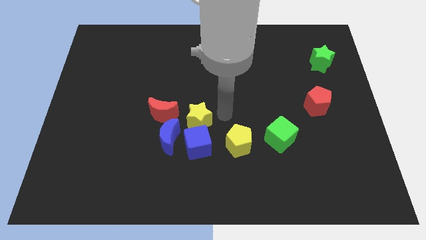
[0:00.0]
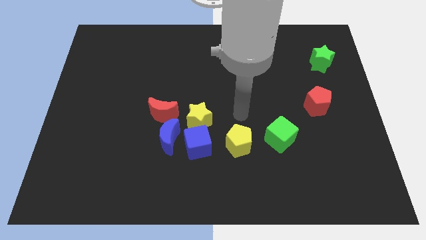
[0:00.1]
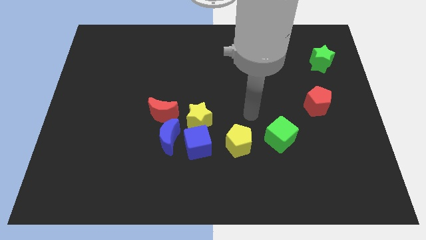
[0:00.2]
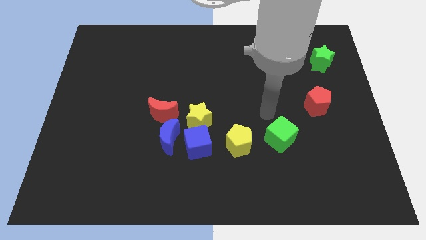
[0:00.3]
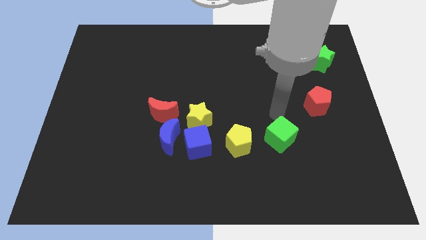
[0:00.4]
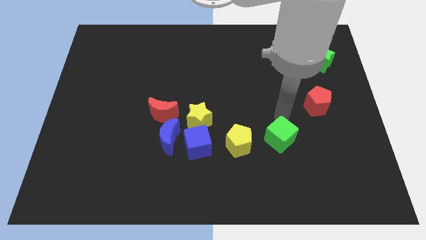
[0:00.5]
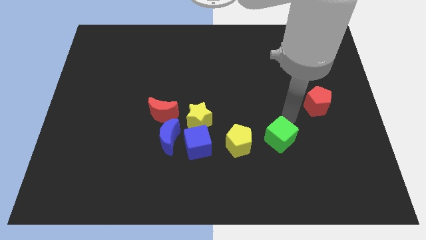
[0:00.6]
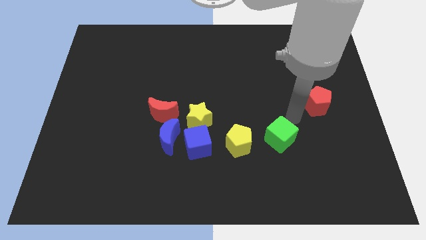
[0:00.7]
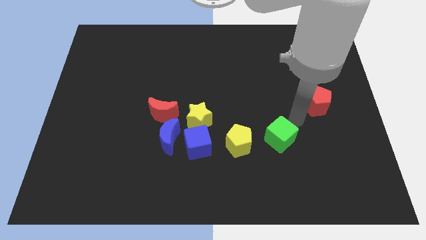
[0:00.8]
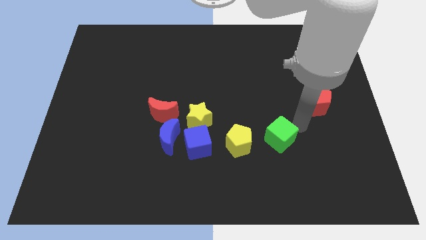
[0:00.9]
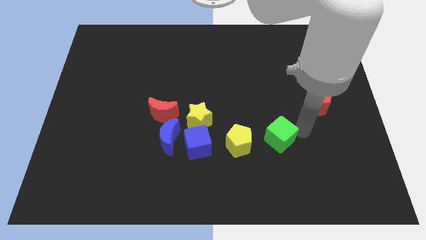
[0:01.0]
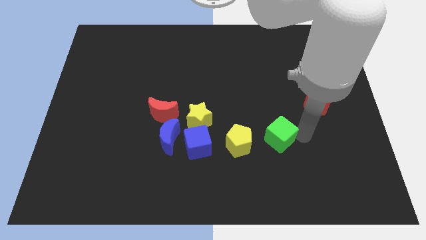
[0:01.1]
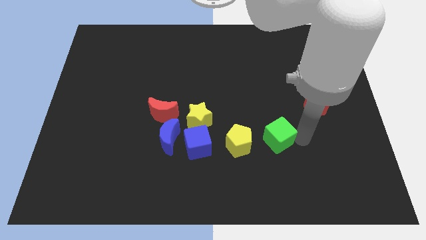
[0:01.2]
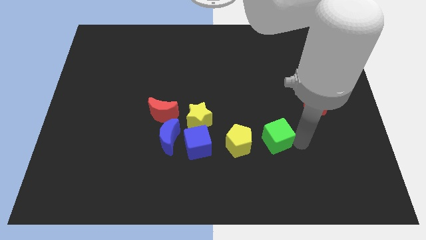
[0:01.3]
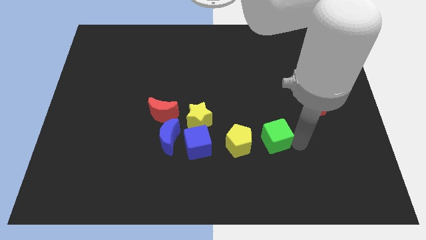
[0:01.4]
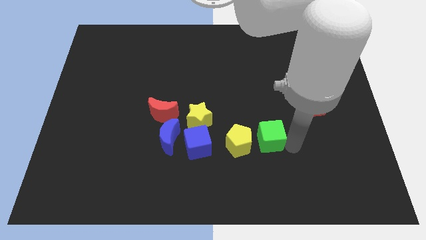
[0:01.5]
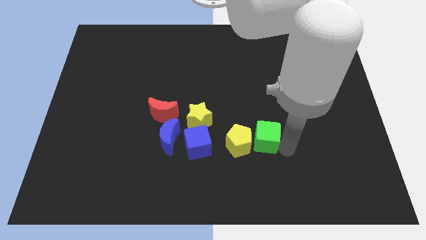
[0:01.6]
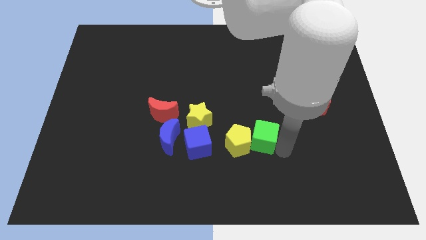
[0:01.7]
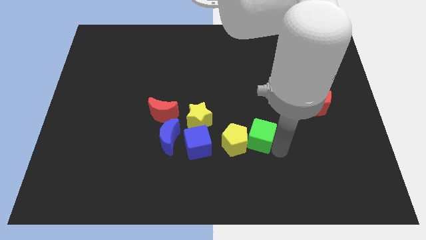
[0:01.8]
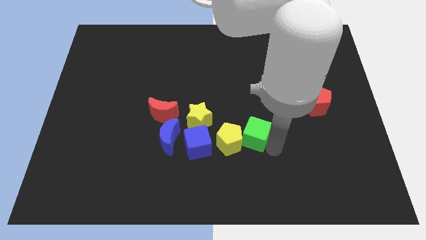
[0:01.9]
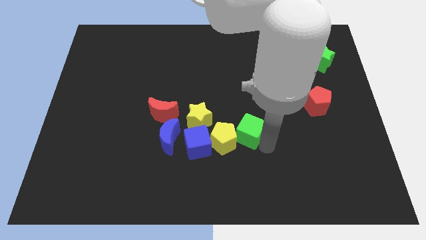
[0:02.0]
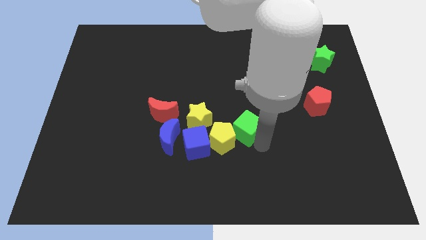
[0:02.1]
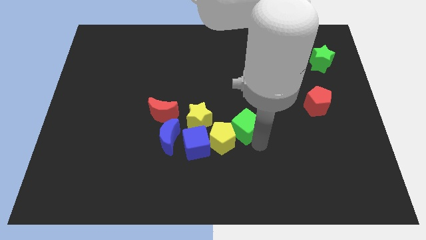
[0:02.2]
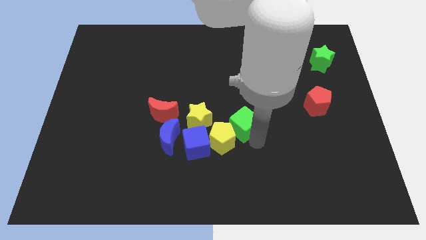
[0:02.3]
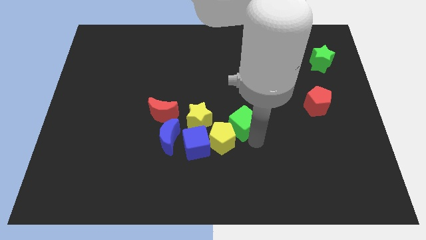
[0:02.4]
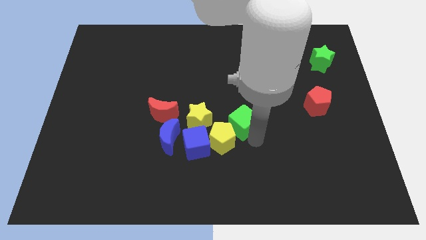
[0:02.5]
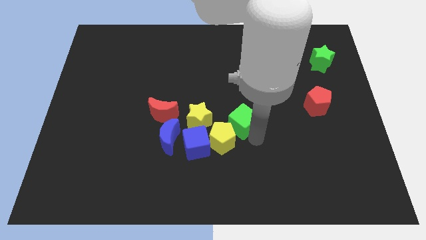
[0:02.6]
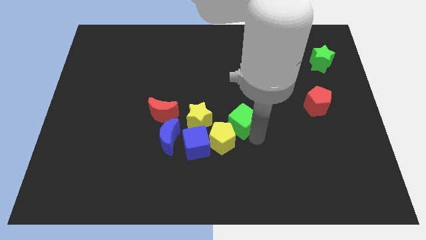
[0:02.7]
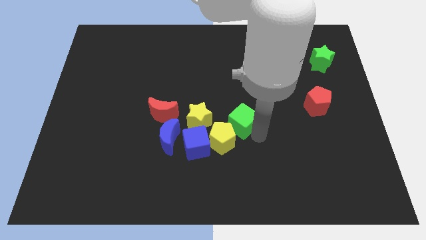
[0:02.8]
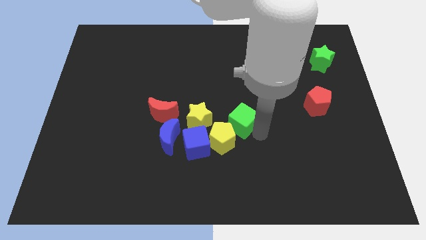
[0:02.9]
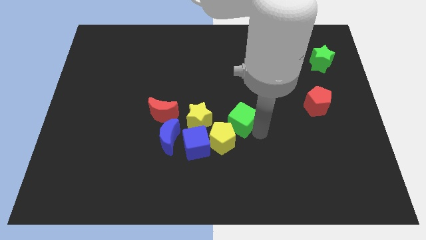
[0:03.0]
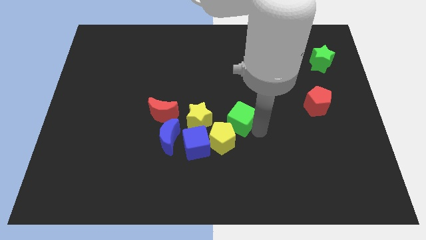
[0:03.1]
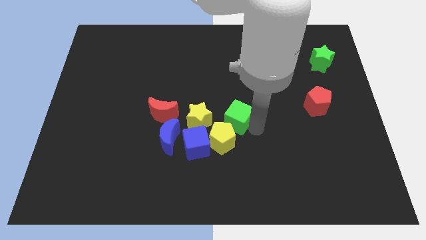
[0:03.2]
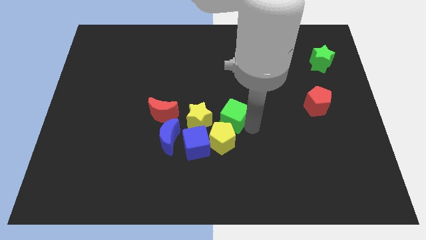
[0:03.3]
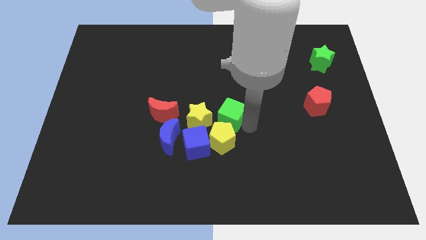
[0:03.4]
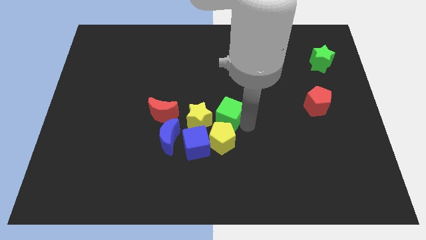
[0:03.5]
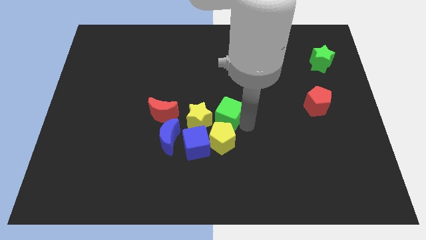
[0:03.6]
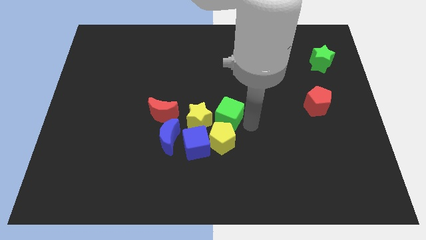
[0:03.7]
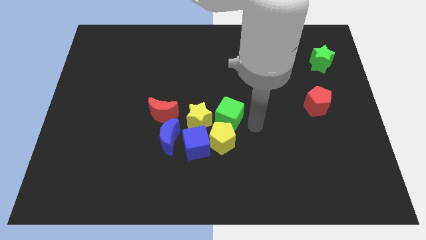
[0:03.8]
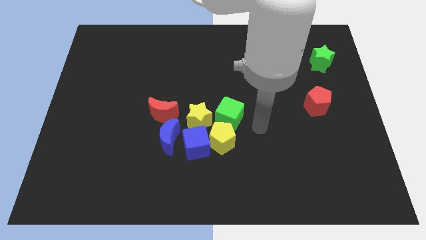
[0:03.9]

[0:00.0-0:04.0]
move the green cube to the top of the yellow pentagon

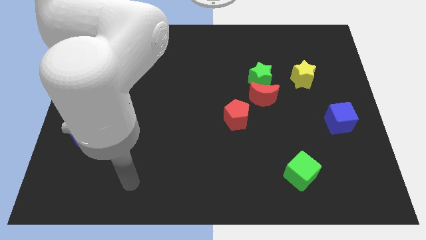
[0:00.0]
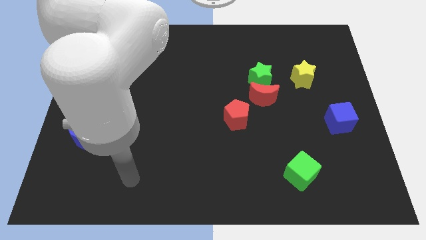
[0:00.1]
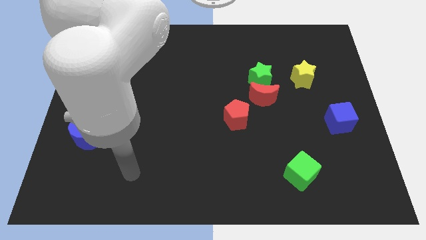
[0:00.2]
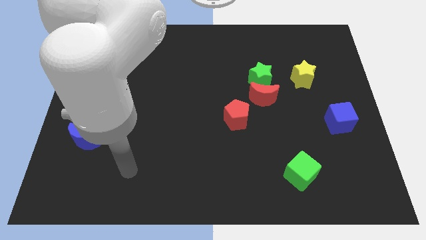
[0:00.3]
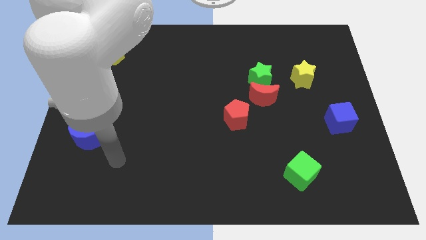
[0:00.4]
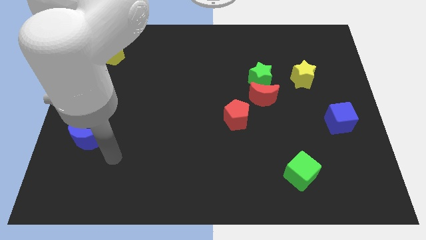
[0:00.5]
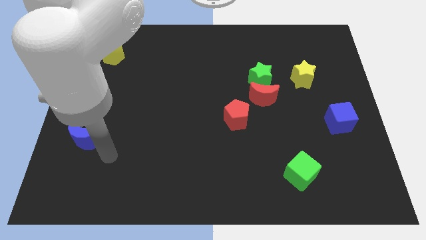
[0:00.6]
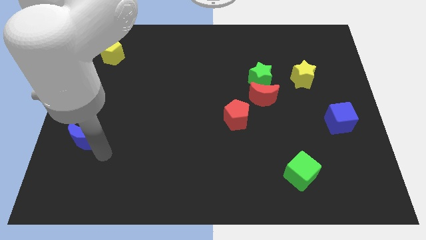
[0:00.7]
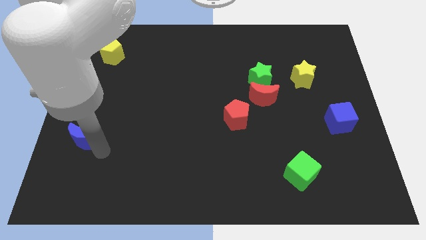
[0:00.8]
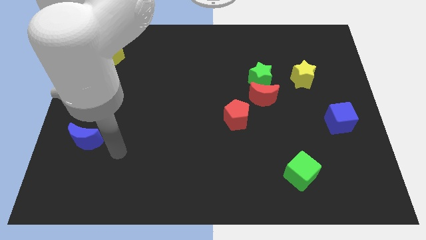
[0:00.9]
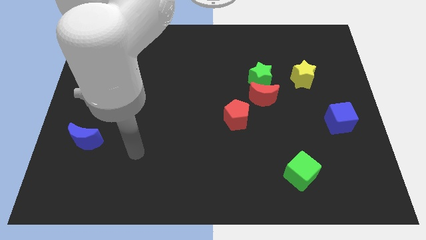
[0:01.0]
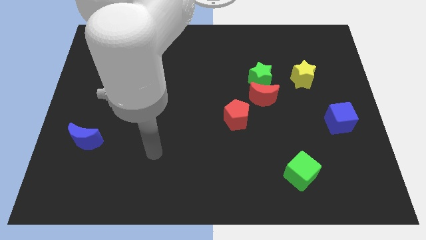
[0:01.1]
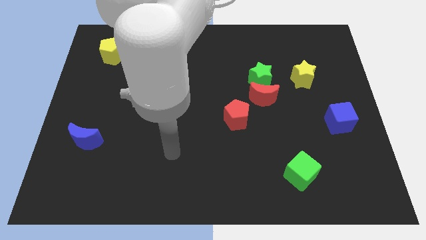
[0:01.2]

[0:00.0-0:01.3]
place arm right to the blue moon

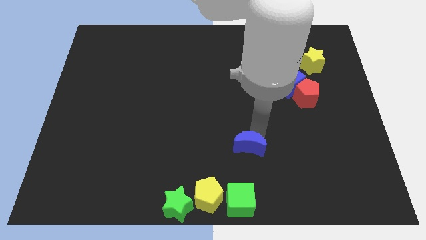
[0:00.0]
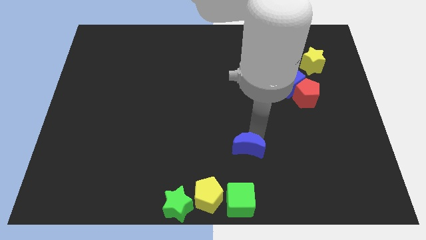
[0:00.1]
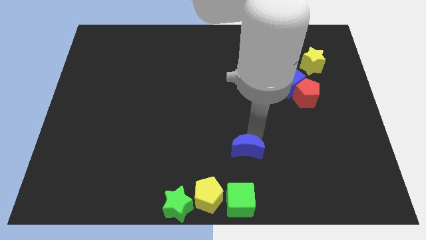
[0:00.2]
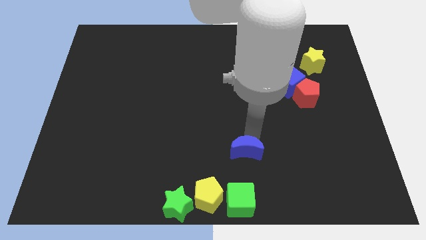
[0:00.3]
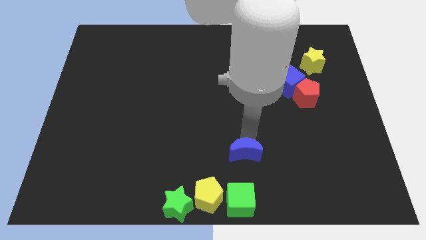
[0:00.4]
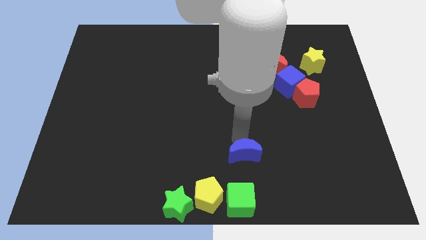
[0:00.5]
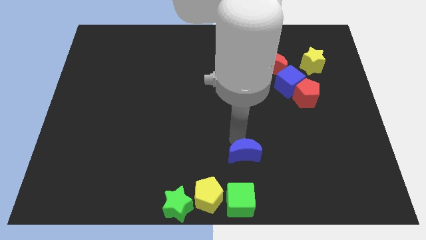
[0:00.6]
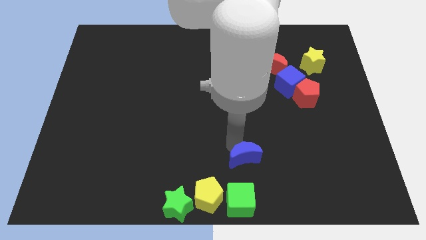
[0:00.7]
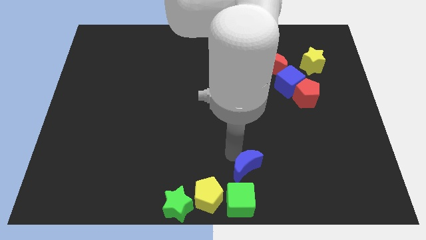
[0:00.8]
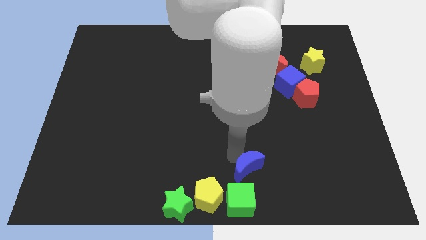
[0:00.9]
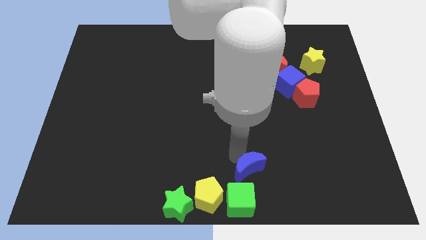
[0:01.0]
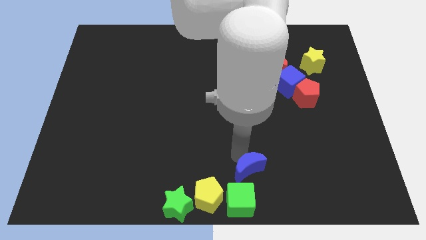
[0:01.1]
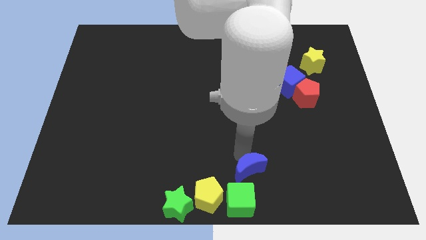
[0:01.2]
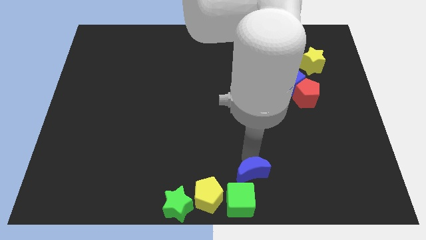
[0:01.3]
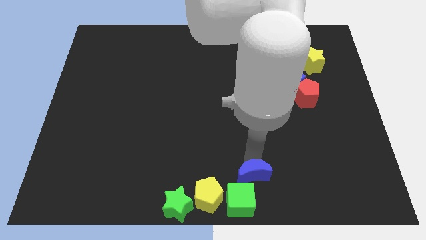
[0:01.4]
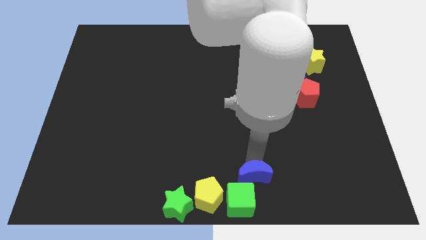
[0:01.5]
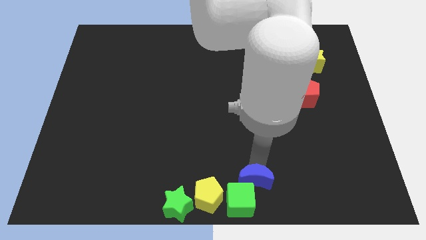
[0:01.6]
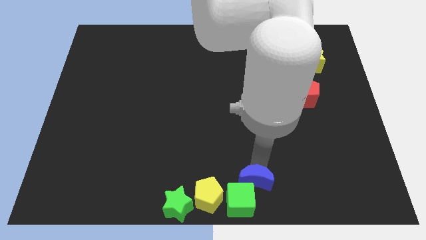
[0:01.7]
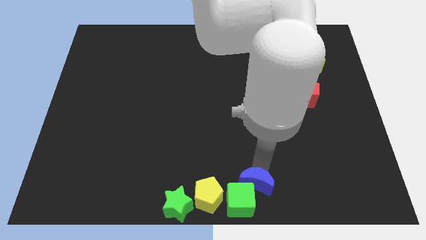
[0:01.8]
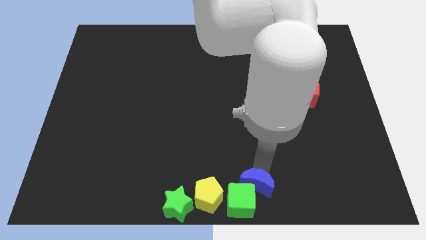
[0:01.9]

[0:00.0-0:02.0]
move the blue crescent into the green cube at the bottom center

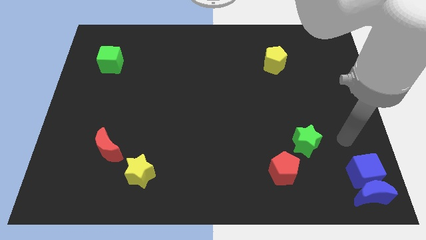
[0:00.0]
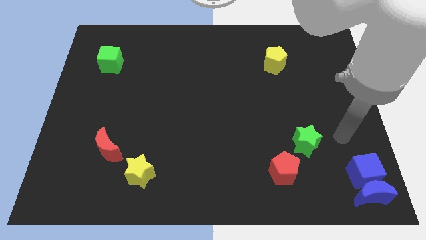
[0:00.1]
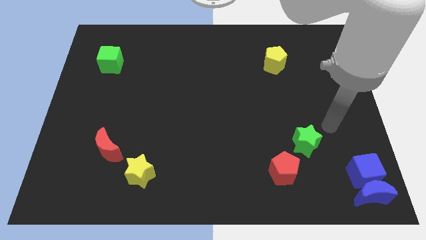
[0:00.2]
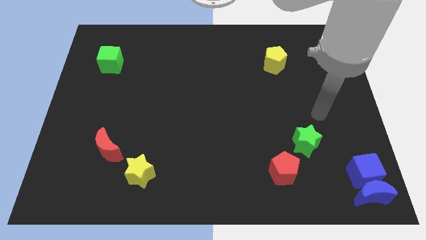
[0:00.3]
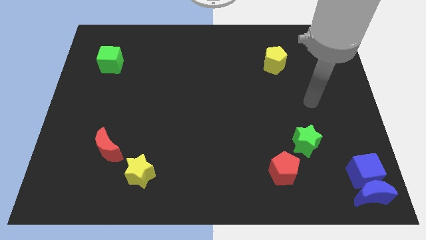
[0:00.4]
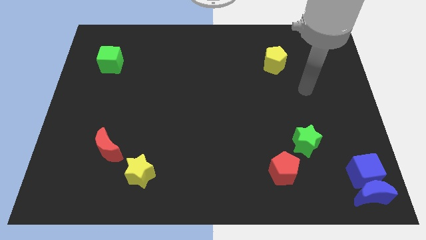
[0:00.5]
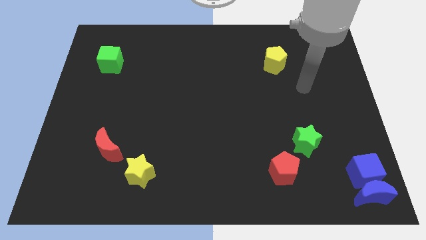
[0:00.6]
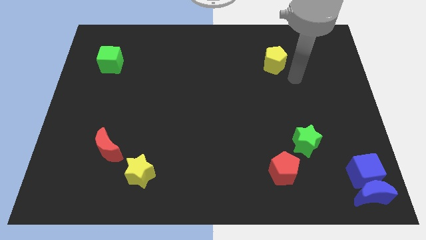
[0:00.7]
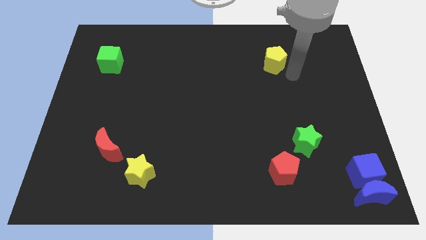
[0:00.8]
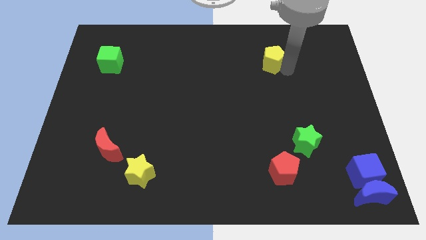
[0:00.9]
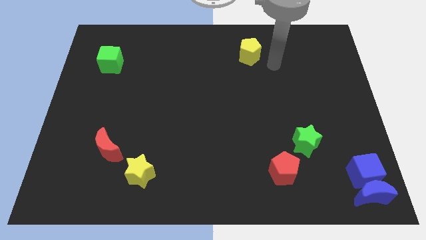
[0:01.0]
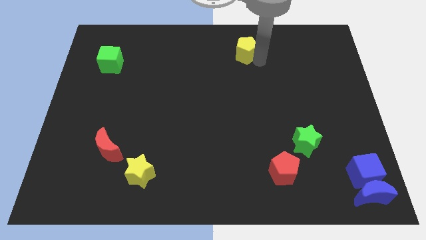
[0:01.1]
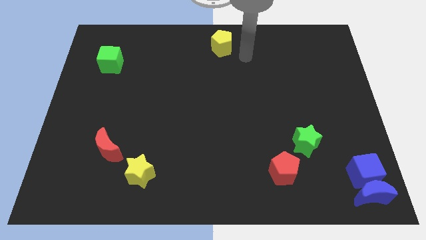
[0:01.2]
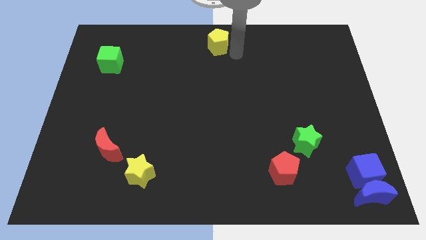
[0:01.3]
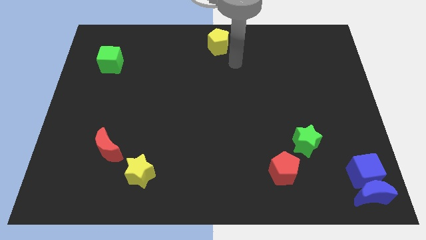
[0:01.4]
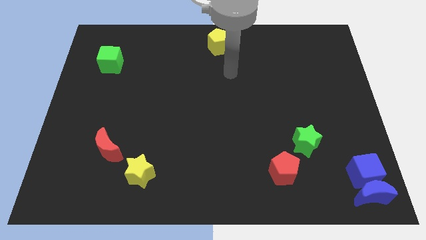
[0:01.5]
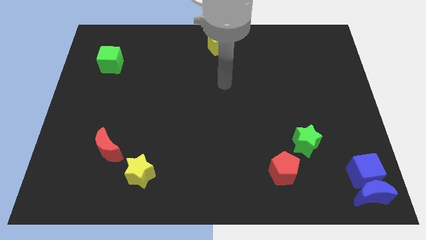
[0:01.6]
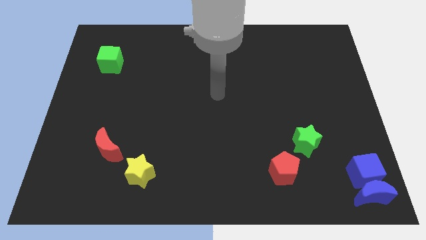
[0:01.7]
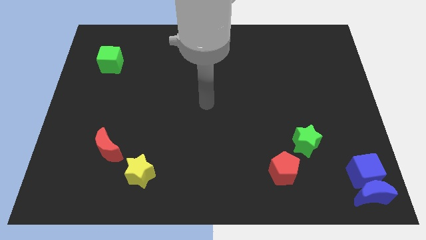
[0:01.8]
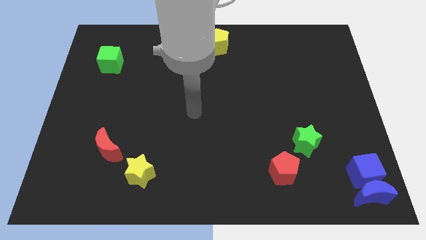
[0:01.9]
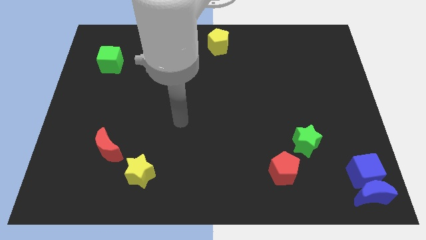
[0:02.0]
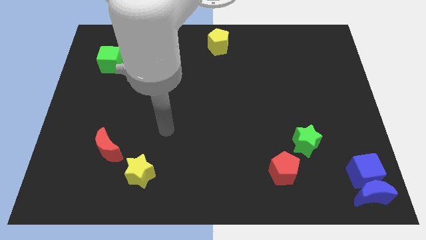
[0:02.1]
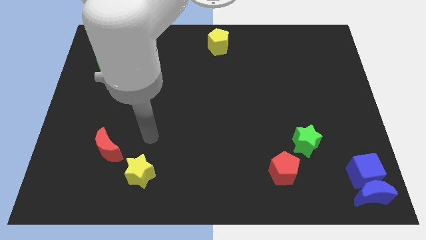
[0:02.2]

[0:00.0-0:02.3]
place the yellow pentagon to the top centre
